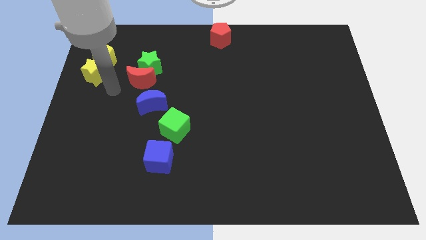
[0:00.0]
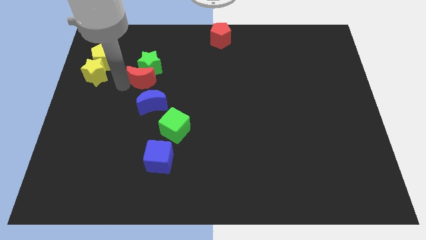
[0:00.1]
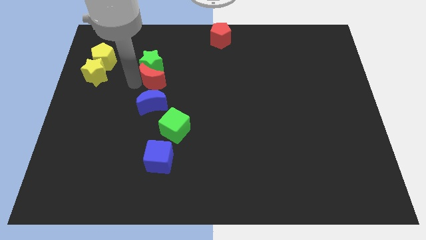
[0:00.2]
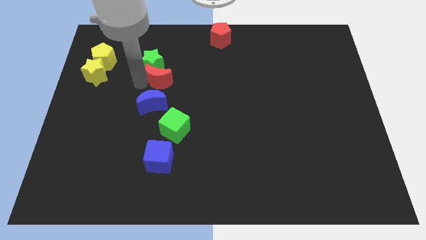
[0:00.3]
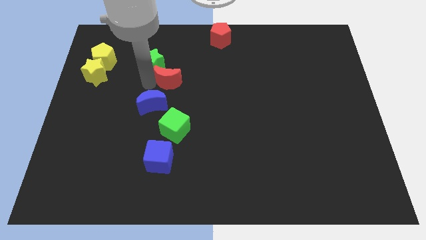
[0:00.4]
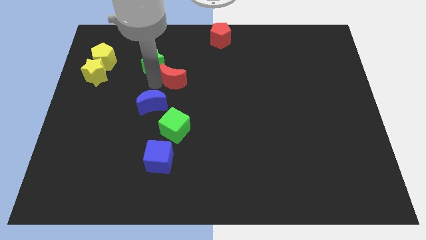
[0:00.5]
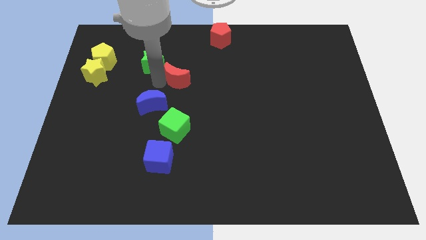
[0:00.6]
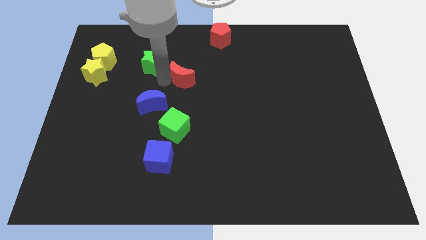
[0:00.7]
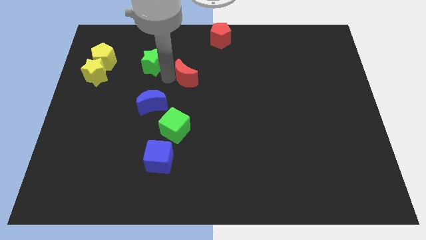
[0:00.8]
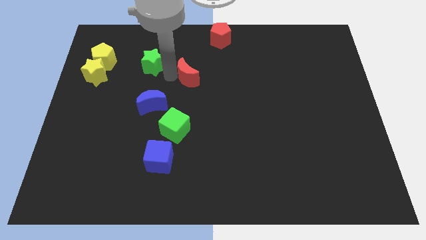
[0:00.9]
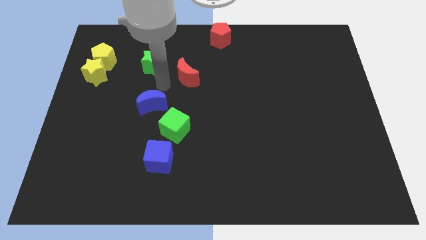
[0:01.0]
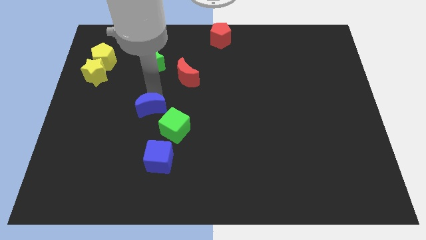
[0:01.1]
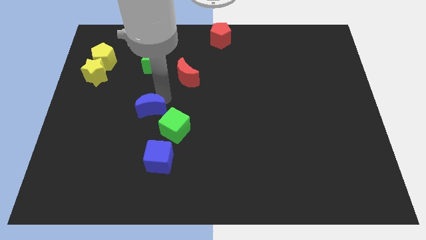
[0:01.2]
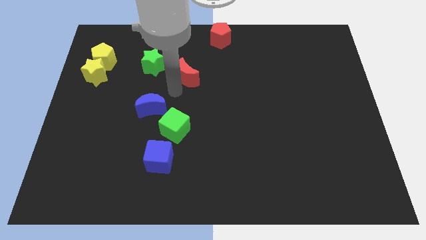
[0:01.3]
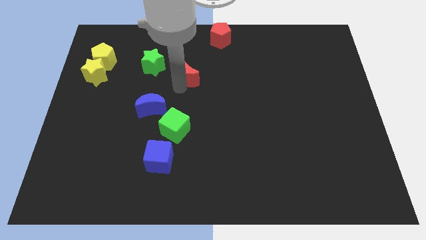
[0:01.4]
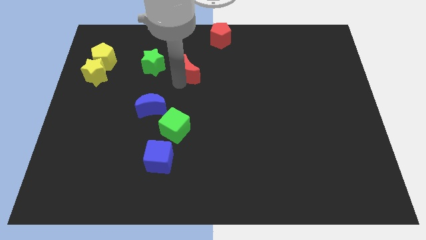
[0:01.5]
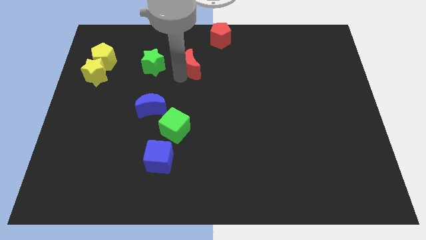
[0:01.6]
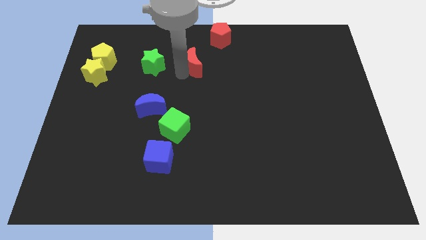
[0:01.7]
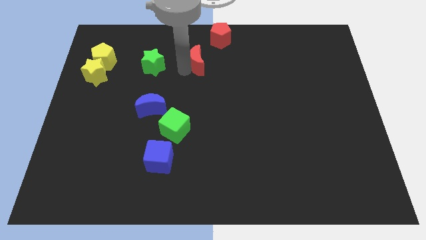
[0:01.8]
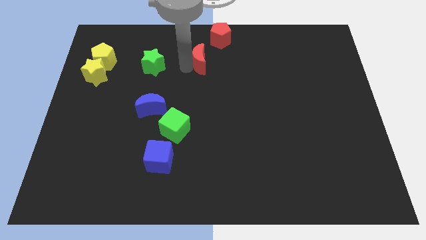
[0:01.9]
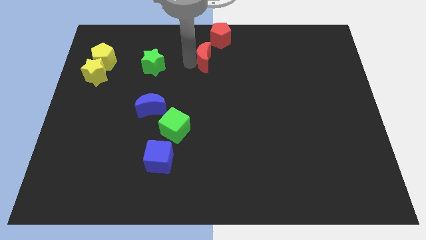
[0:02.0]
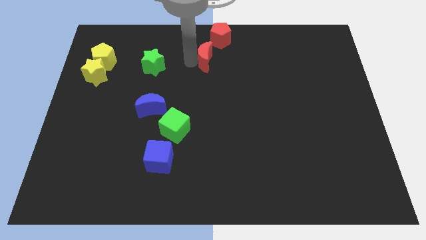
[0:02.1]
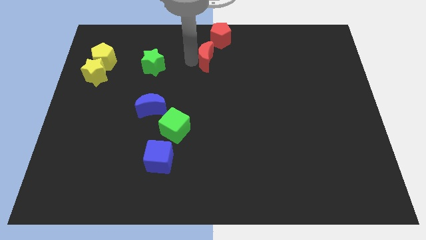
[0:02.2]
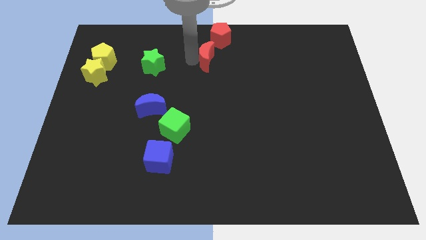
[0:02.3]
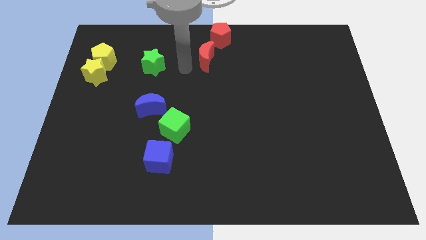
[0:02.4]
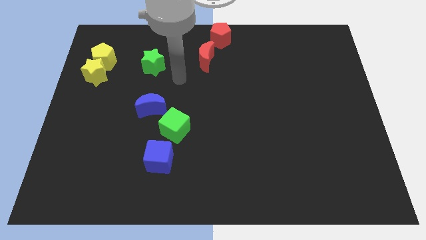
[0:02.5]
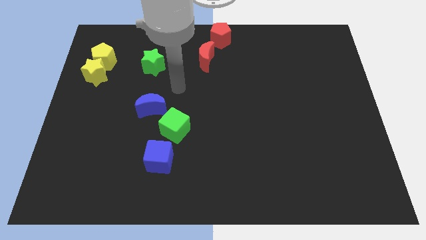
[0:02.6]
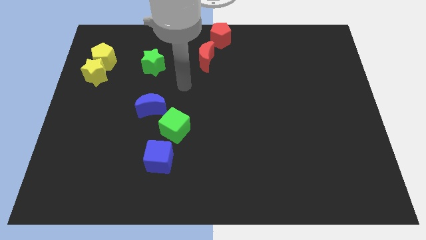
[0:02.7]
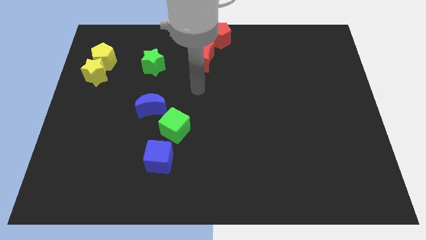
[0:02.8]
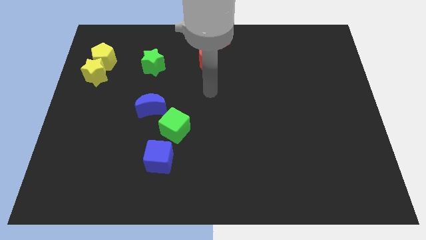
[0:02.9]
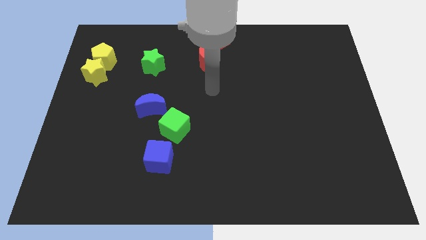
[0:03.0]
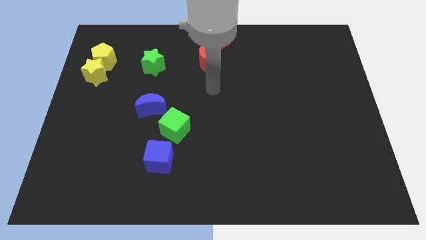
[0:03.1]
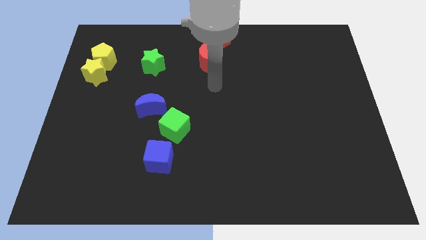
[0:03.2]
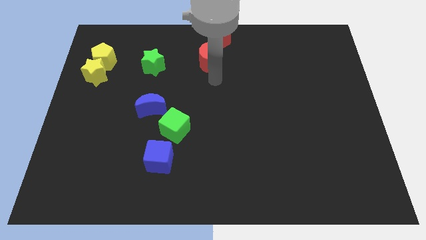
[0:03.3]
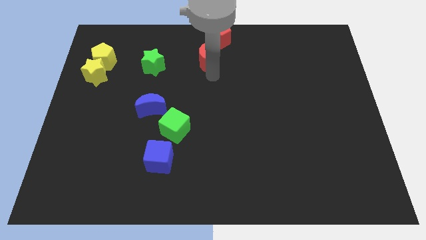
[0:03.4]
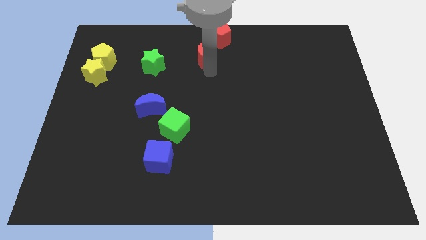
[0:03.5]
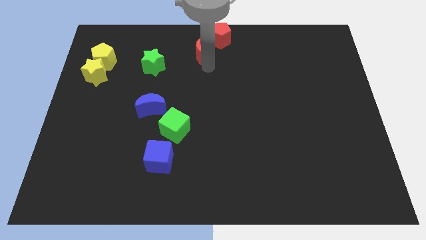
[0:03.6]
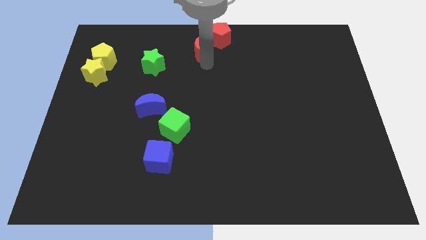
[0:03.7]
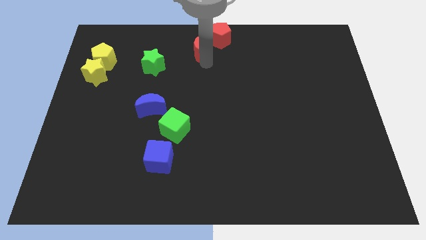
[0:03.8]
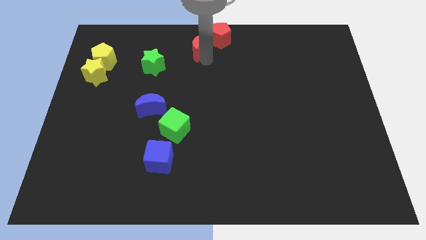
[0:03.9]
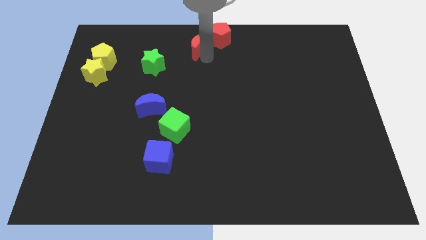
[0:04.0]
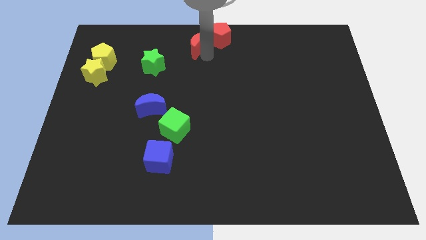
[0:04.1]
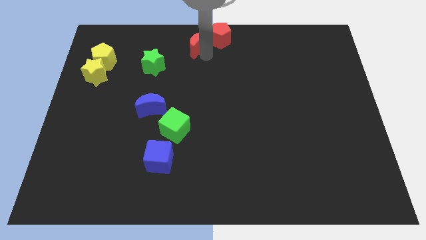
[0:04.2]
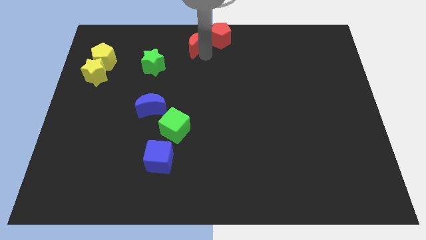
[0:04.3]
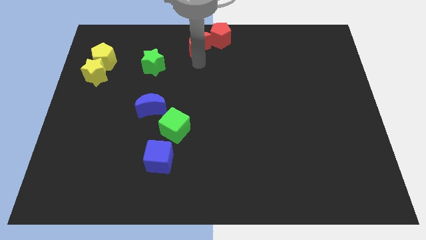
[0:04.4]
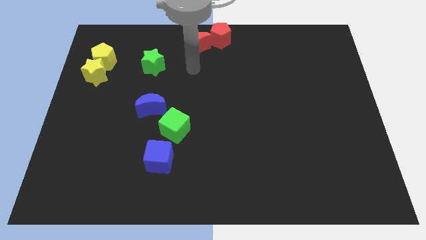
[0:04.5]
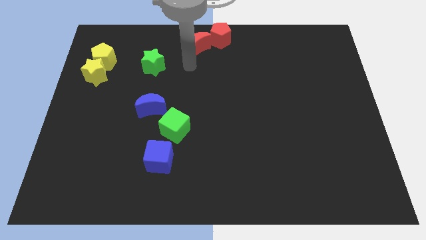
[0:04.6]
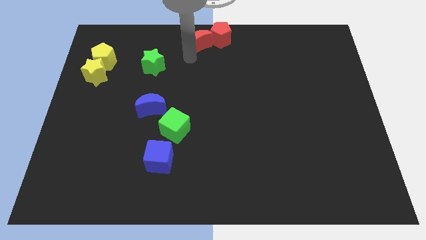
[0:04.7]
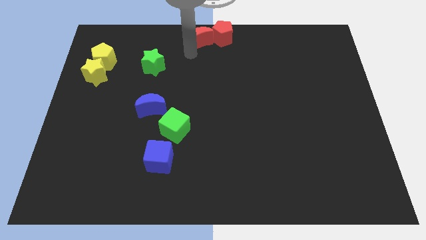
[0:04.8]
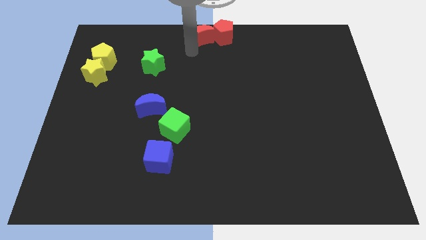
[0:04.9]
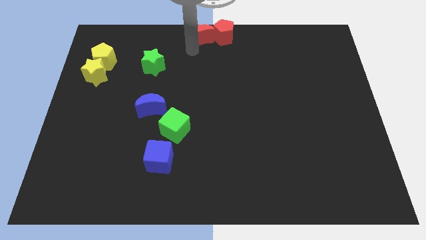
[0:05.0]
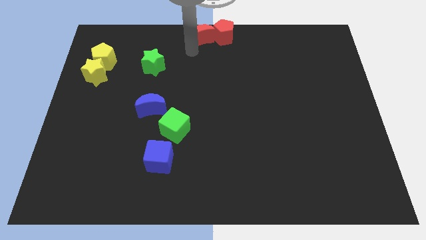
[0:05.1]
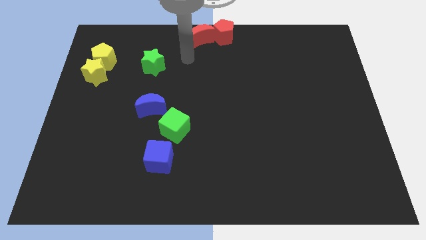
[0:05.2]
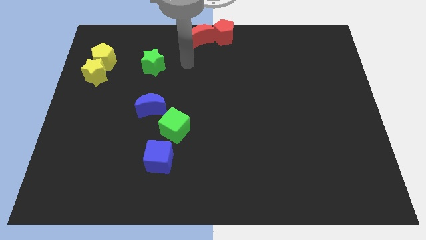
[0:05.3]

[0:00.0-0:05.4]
put the red moon to the left of the red pentagon

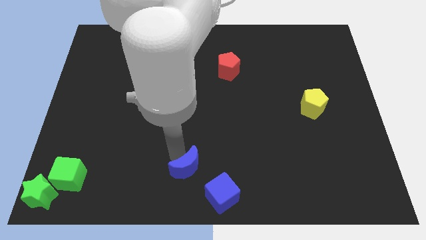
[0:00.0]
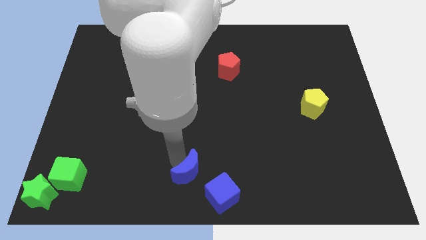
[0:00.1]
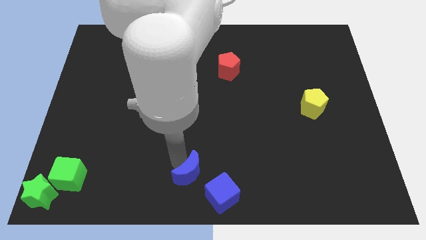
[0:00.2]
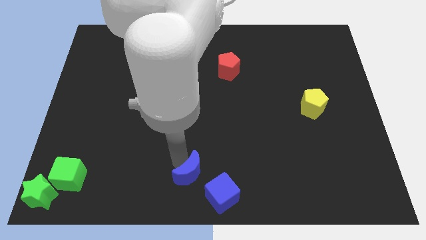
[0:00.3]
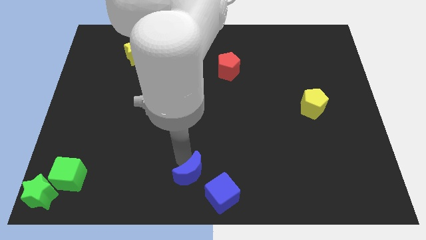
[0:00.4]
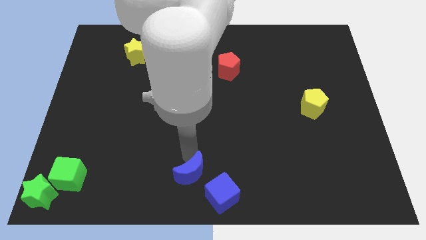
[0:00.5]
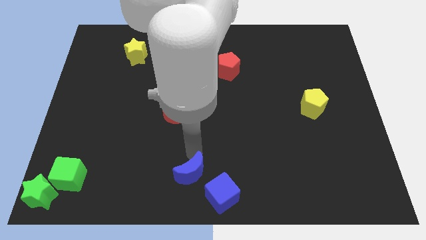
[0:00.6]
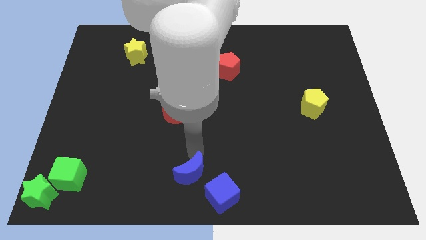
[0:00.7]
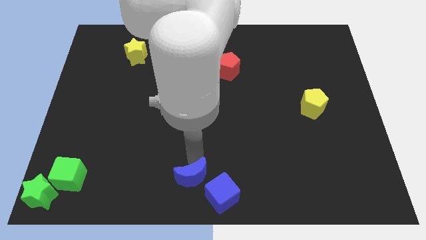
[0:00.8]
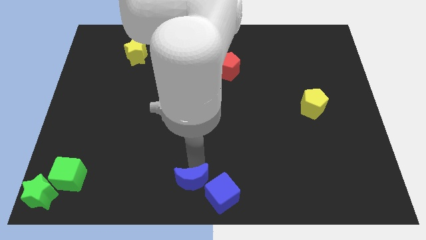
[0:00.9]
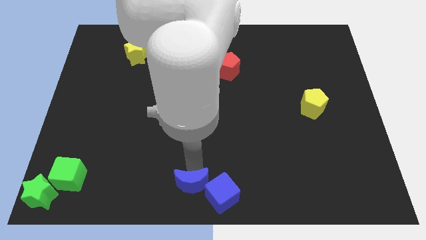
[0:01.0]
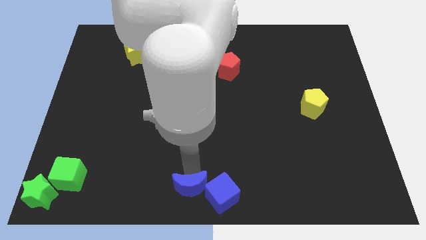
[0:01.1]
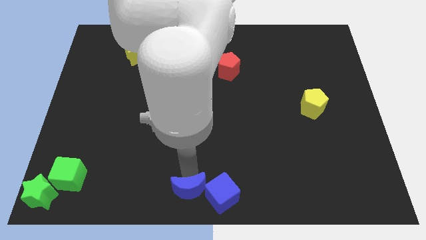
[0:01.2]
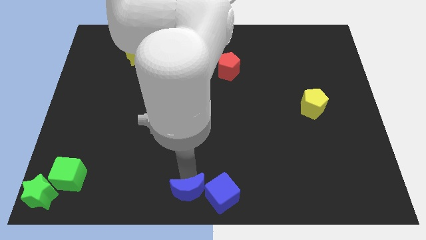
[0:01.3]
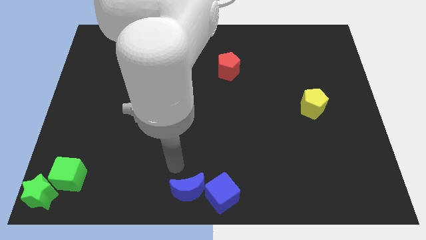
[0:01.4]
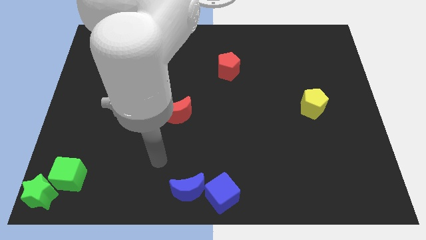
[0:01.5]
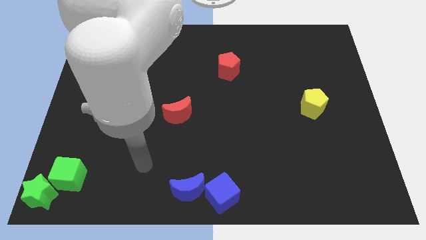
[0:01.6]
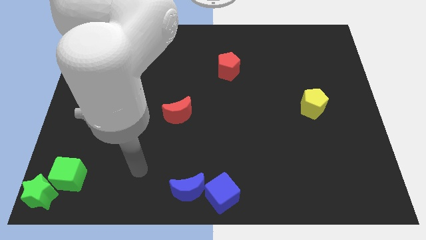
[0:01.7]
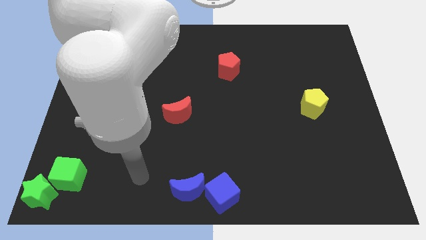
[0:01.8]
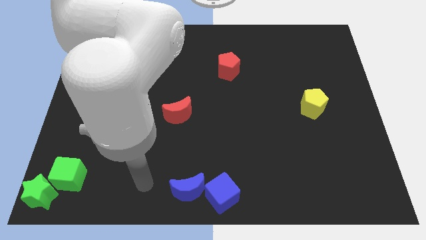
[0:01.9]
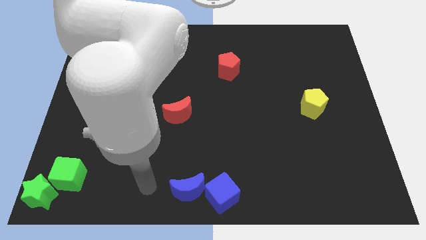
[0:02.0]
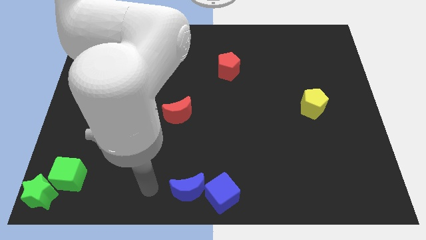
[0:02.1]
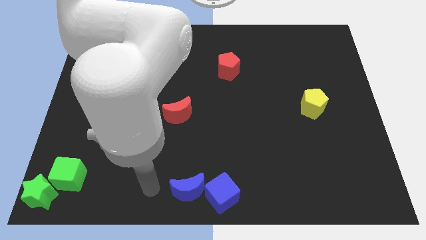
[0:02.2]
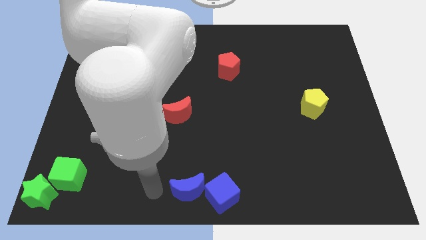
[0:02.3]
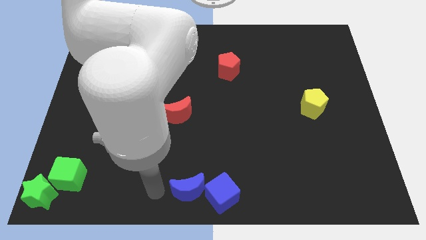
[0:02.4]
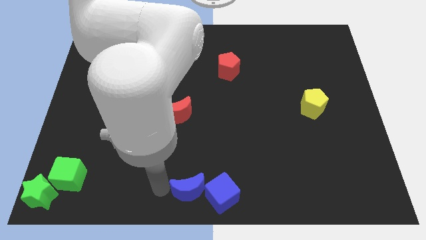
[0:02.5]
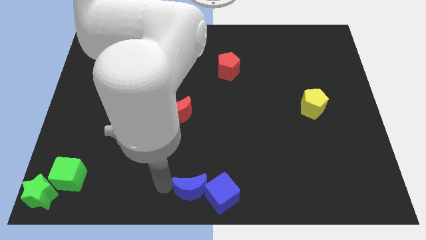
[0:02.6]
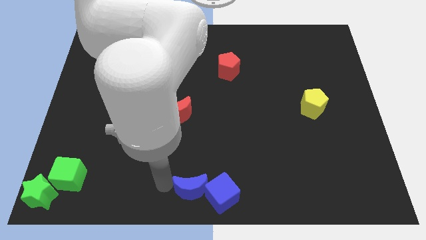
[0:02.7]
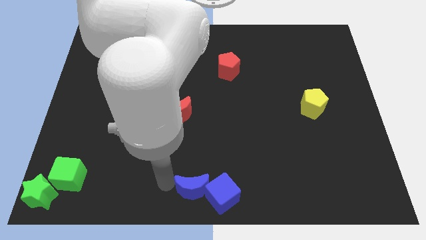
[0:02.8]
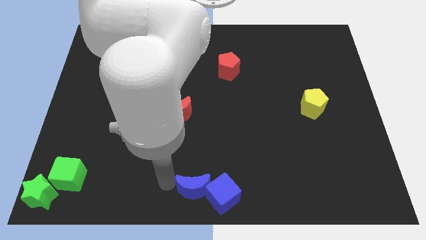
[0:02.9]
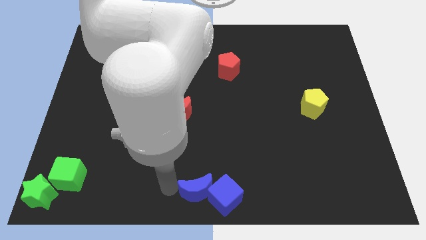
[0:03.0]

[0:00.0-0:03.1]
push the blue moon into the blue cube at the bottom center

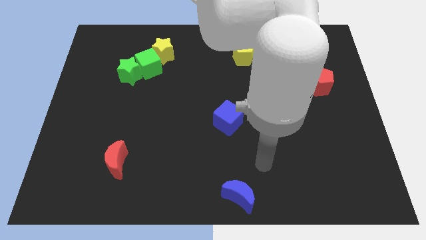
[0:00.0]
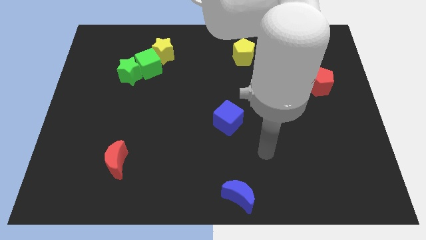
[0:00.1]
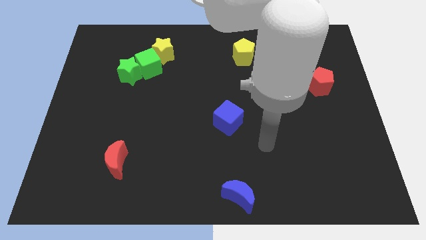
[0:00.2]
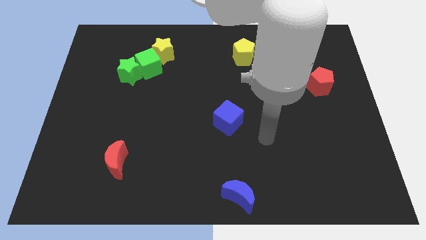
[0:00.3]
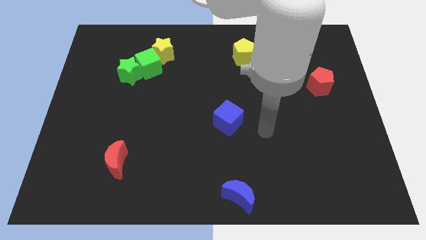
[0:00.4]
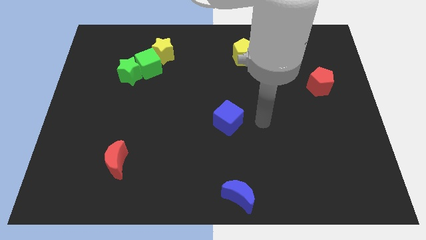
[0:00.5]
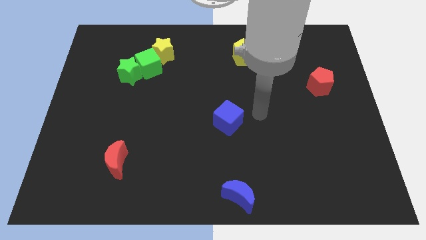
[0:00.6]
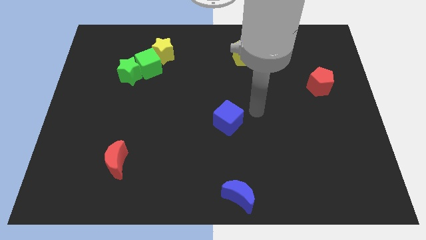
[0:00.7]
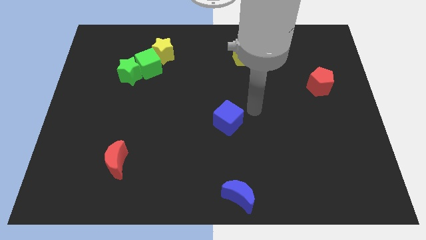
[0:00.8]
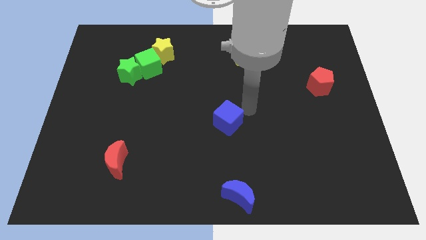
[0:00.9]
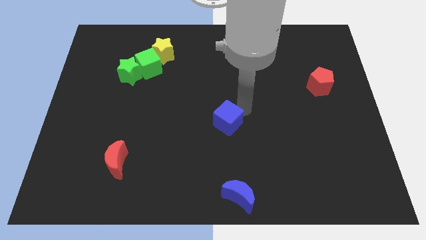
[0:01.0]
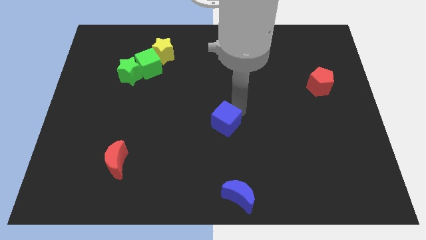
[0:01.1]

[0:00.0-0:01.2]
move your arm near to the blue cube
